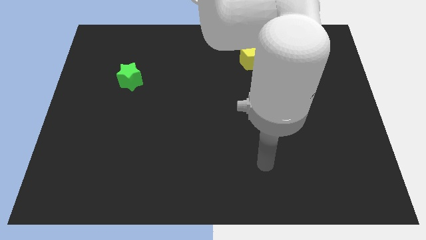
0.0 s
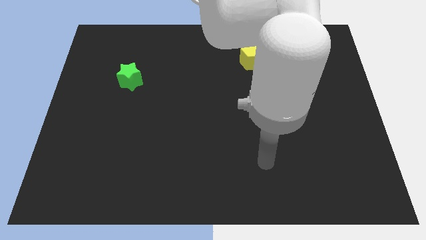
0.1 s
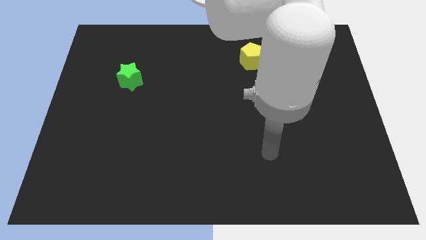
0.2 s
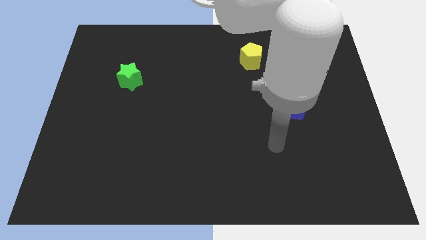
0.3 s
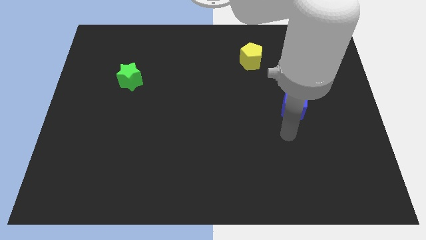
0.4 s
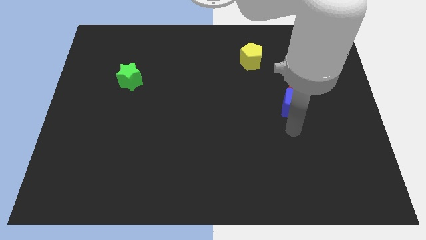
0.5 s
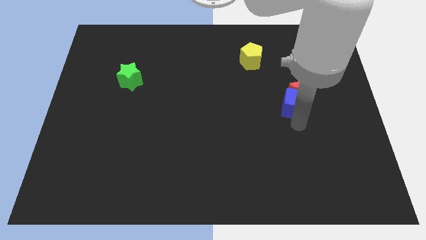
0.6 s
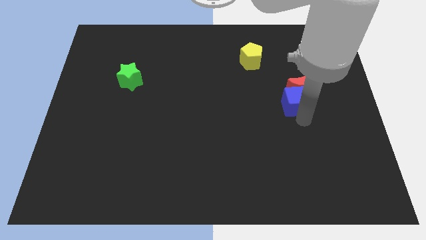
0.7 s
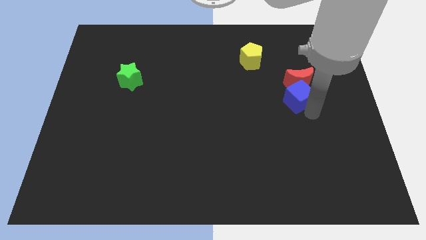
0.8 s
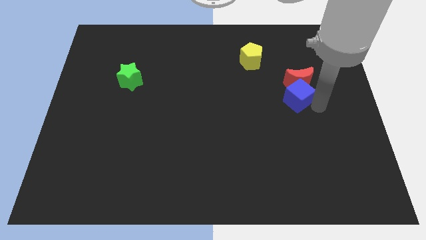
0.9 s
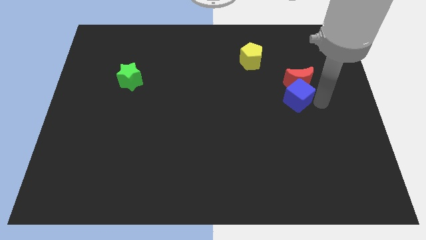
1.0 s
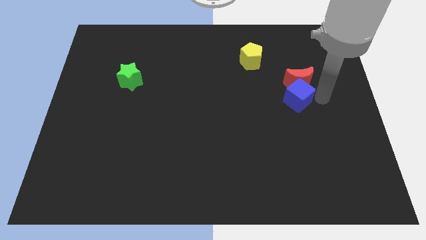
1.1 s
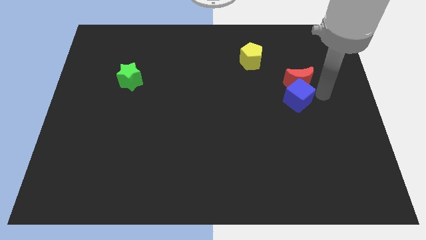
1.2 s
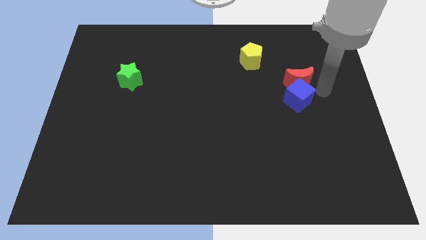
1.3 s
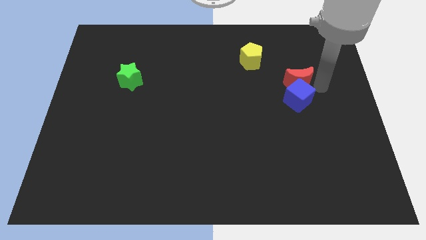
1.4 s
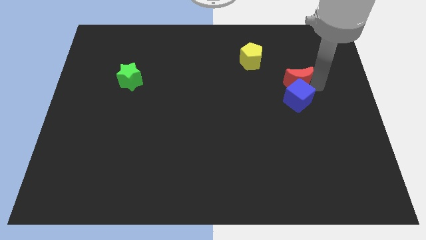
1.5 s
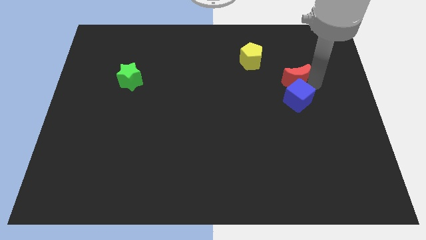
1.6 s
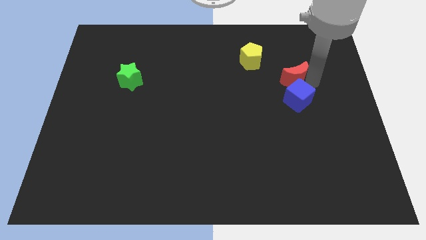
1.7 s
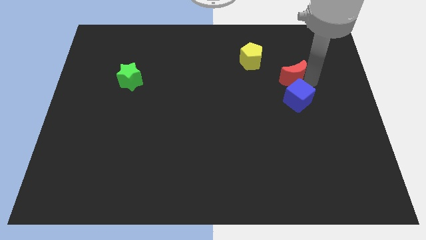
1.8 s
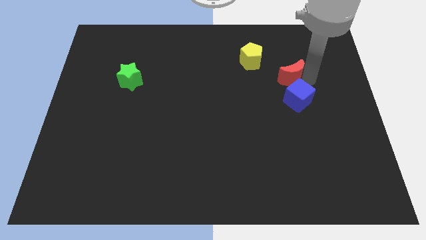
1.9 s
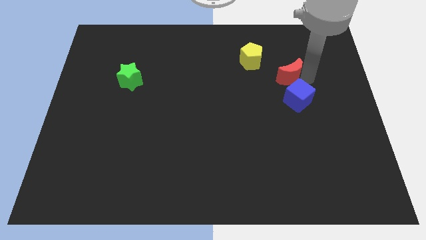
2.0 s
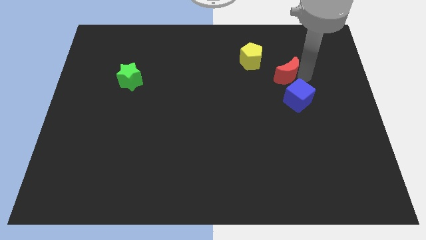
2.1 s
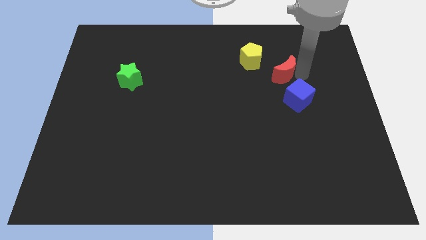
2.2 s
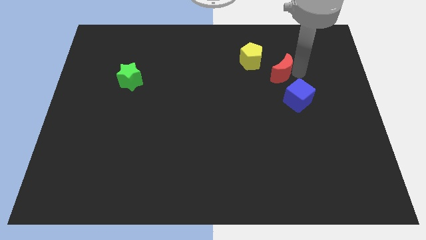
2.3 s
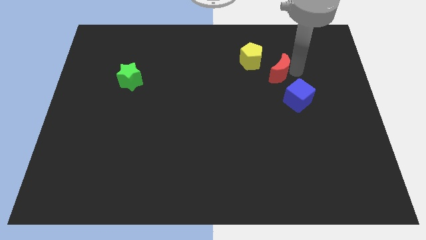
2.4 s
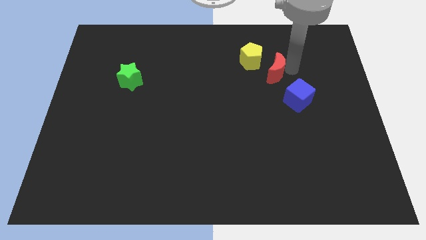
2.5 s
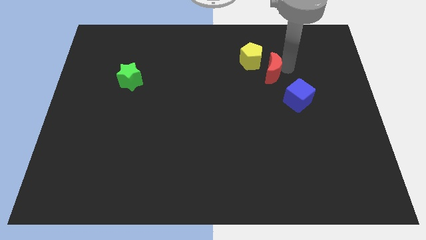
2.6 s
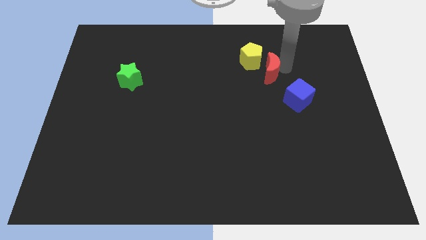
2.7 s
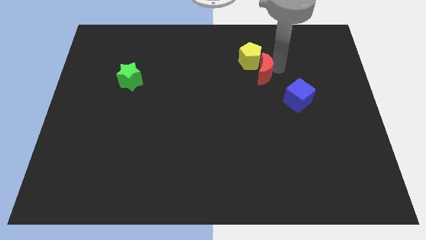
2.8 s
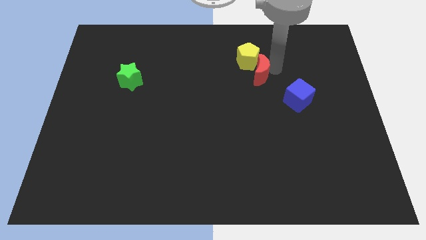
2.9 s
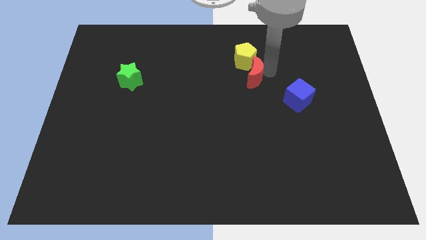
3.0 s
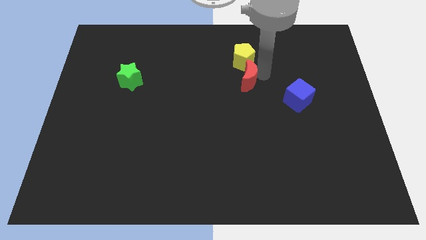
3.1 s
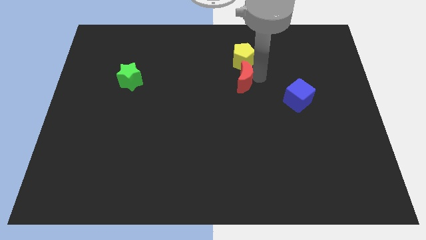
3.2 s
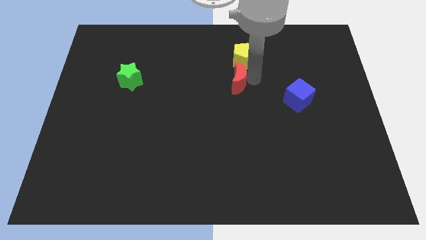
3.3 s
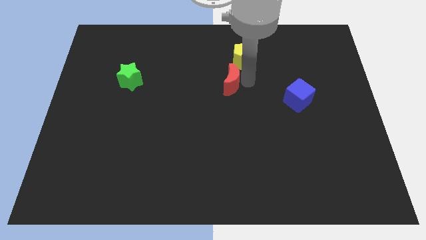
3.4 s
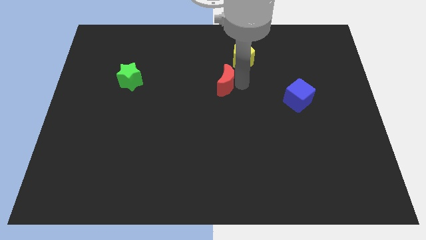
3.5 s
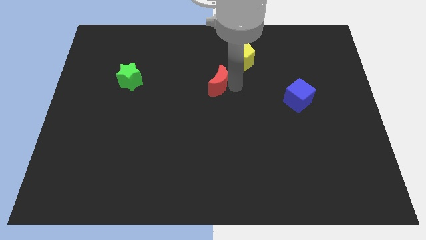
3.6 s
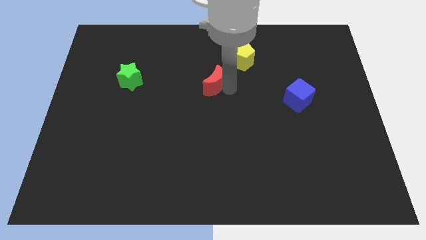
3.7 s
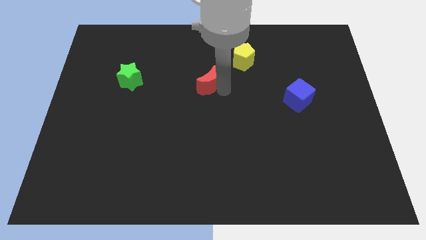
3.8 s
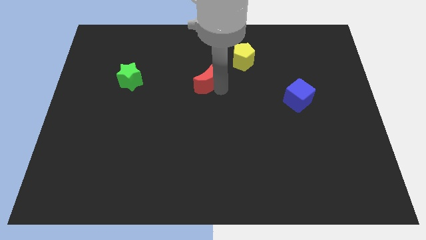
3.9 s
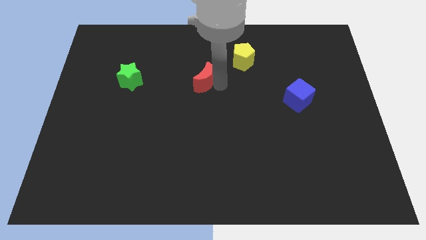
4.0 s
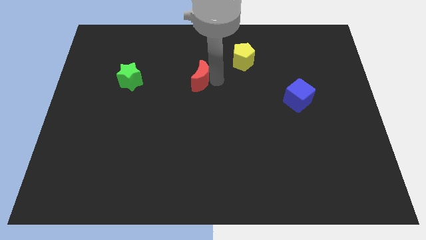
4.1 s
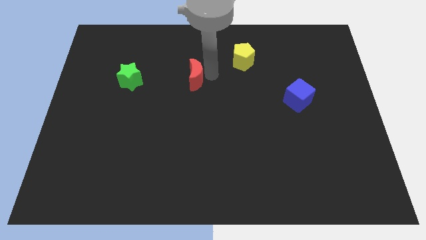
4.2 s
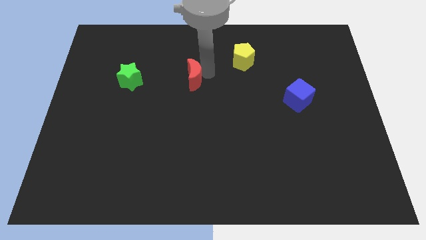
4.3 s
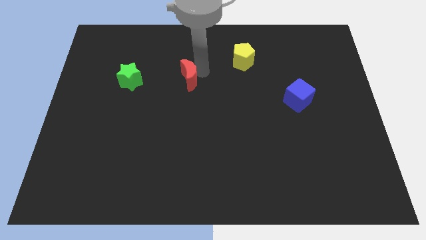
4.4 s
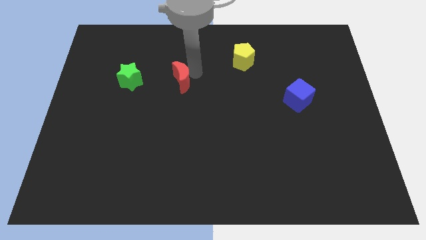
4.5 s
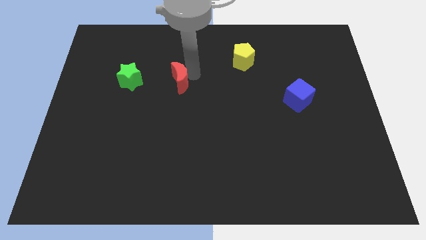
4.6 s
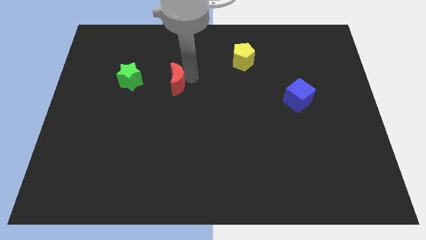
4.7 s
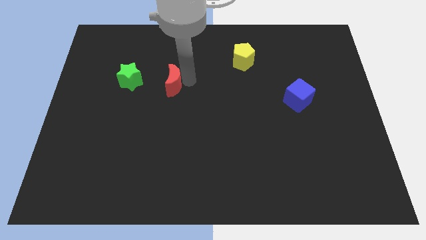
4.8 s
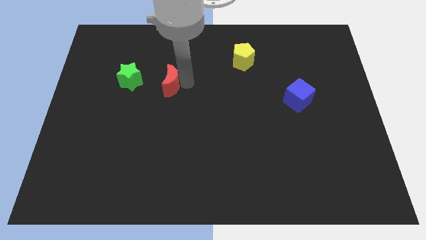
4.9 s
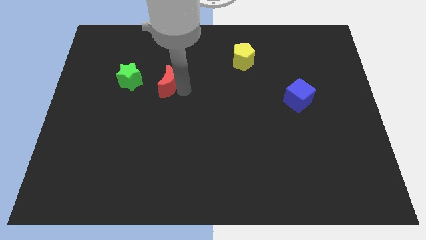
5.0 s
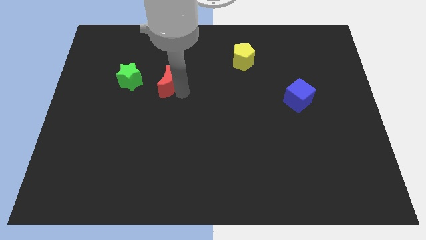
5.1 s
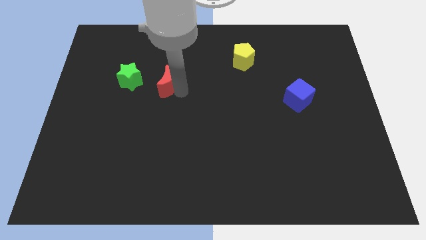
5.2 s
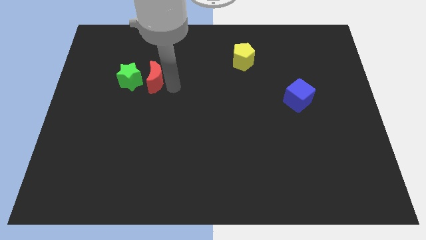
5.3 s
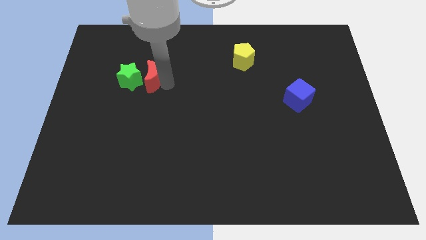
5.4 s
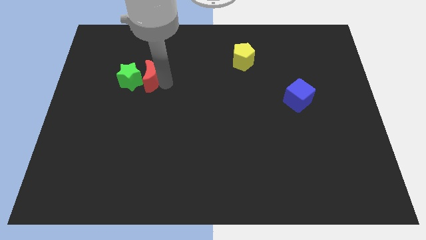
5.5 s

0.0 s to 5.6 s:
slide the moon towards the green star

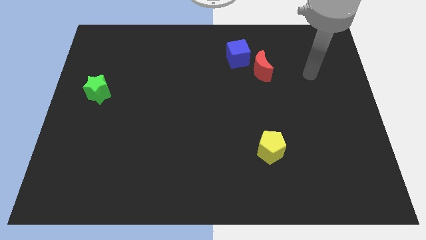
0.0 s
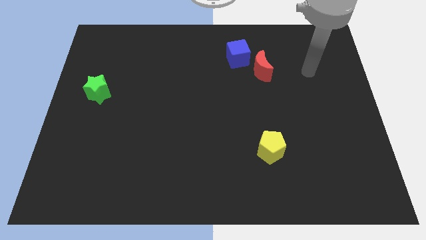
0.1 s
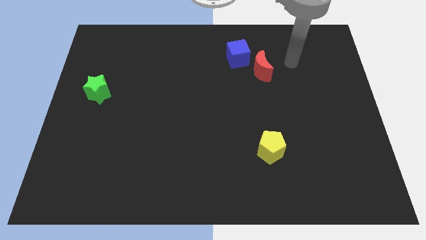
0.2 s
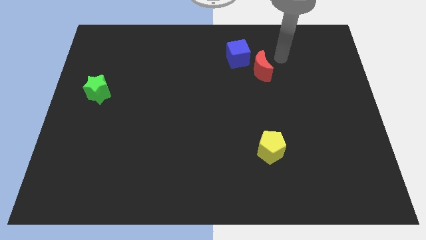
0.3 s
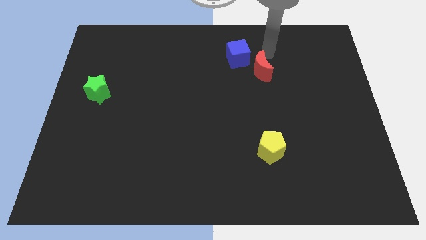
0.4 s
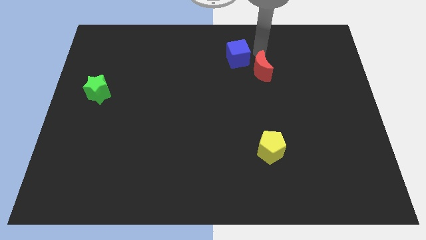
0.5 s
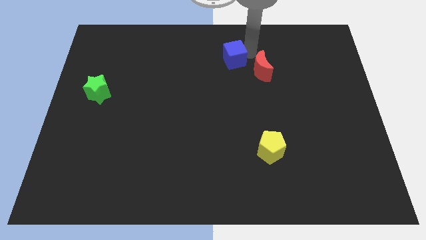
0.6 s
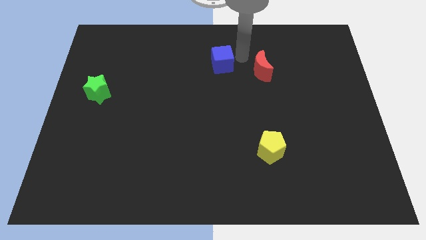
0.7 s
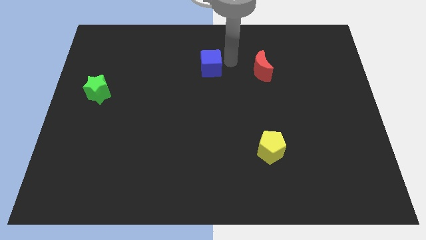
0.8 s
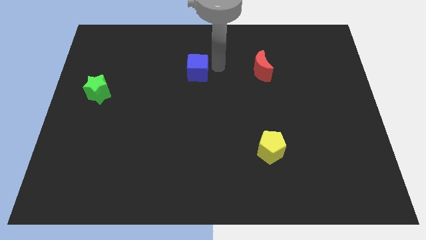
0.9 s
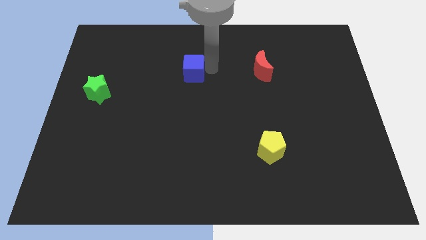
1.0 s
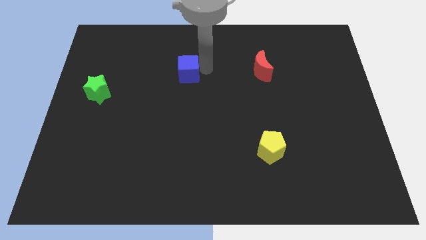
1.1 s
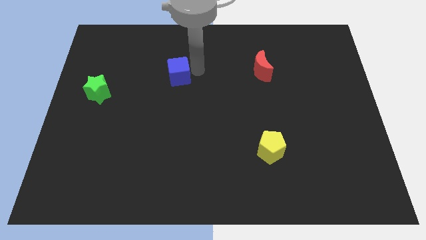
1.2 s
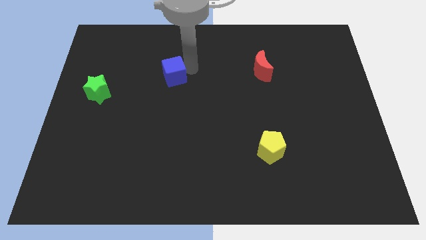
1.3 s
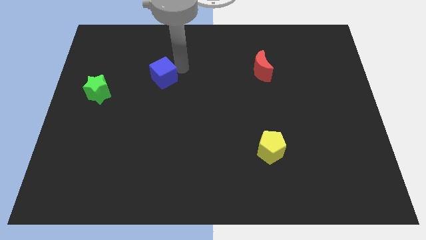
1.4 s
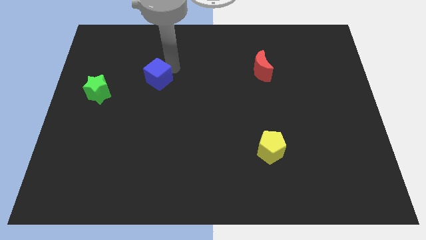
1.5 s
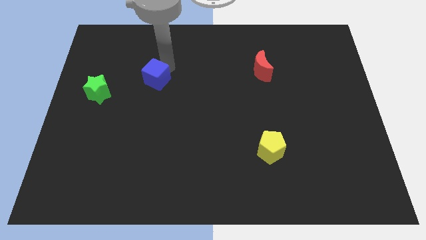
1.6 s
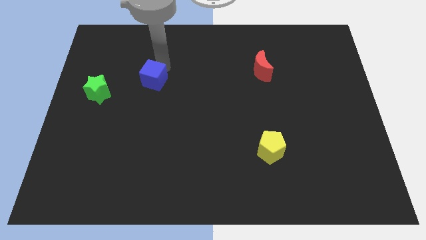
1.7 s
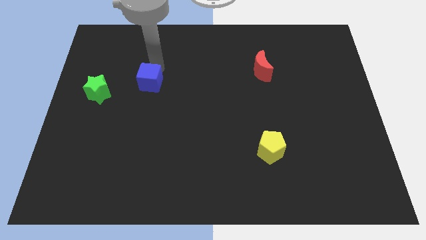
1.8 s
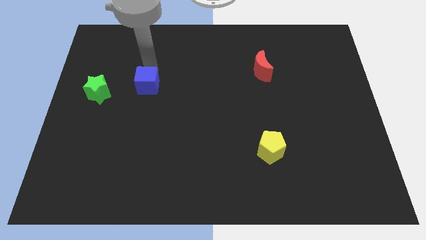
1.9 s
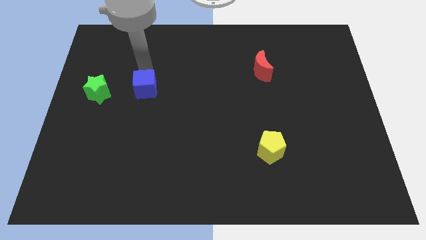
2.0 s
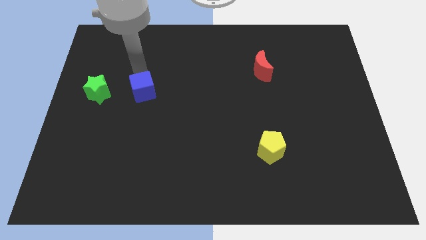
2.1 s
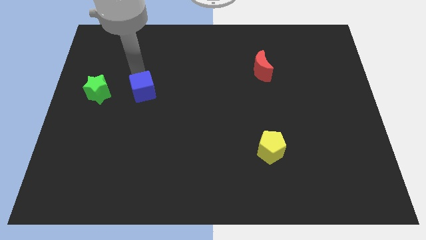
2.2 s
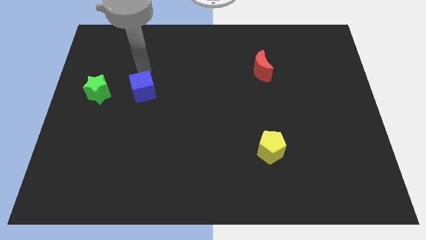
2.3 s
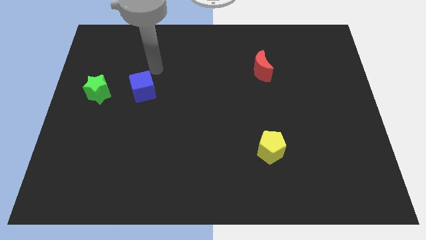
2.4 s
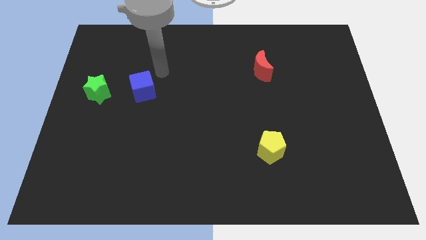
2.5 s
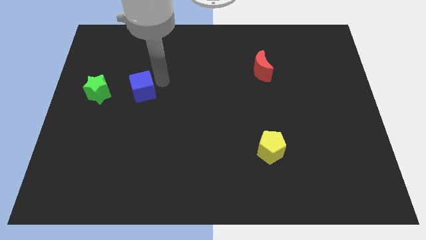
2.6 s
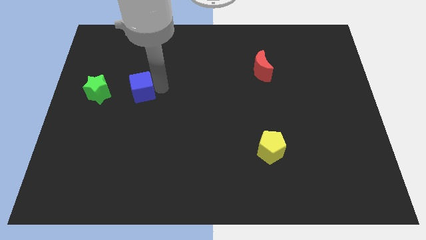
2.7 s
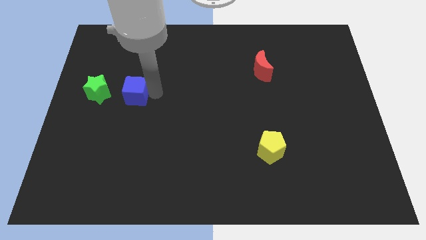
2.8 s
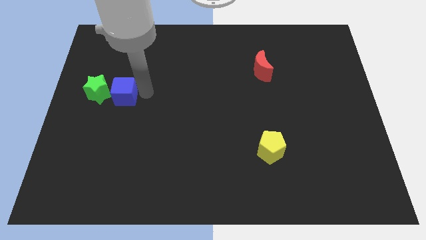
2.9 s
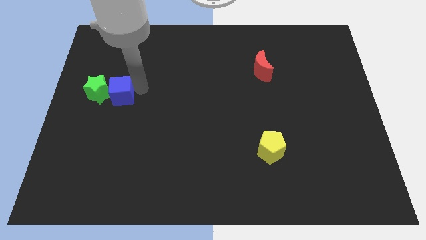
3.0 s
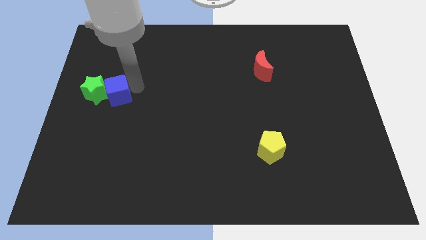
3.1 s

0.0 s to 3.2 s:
put the blue cube next to the star
